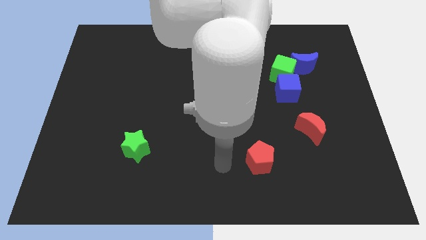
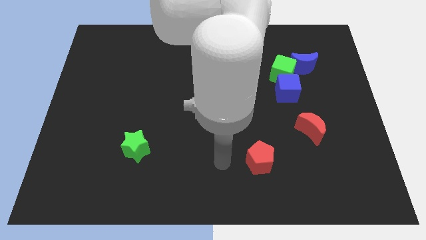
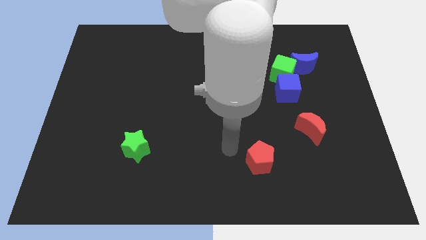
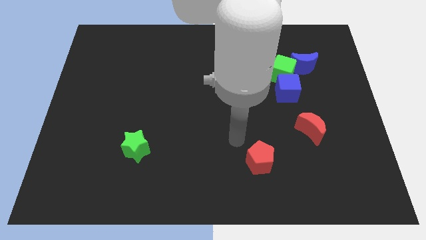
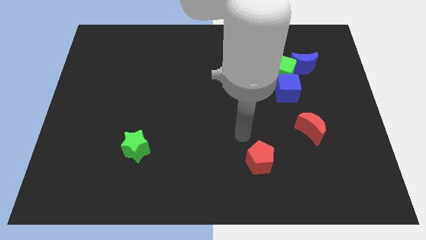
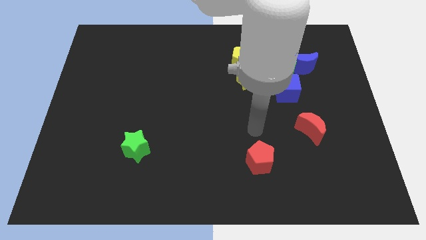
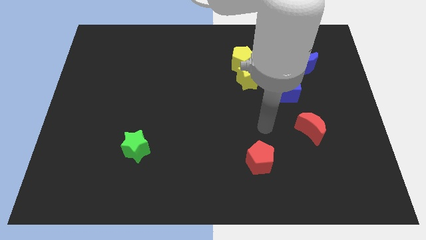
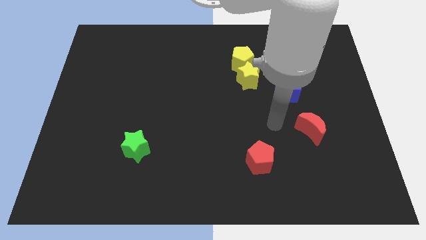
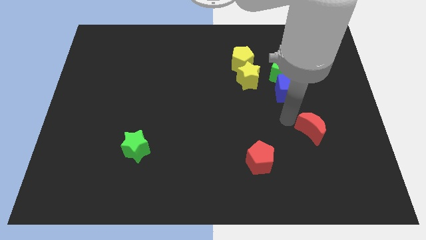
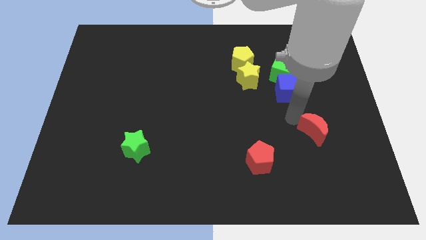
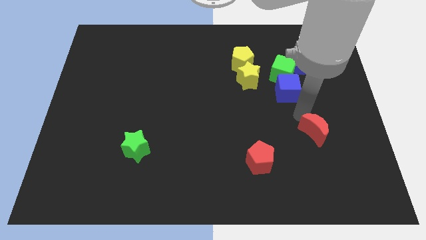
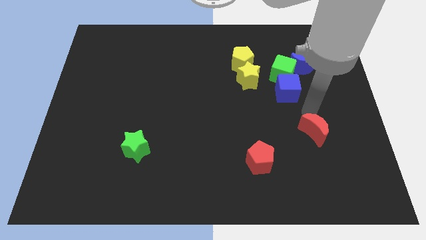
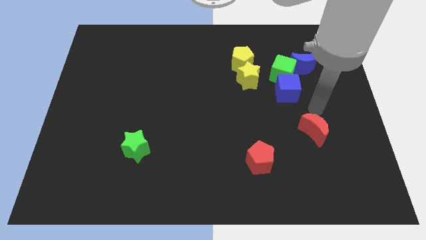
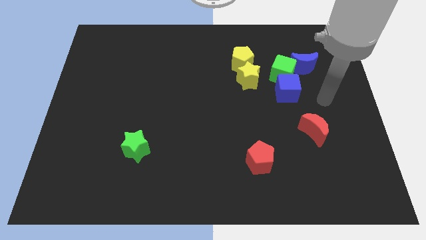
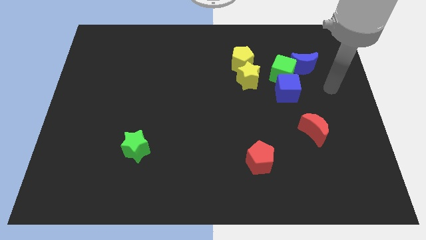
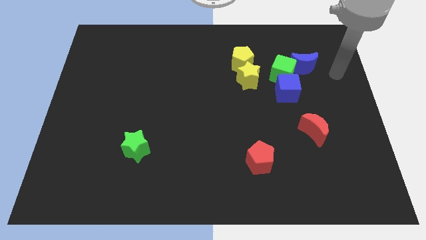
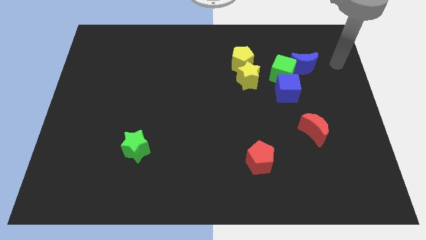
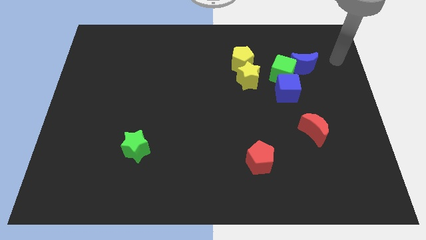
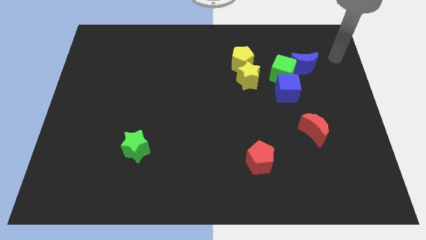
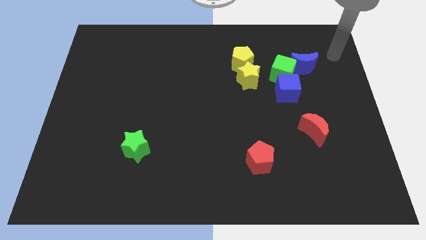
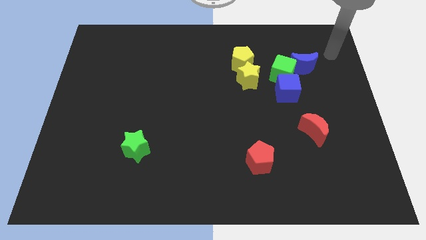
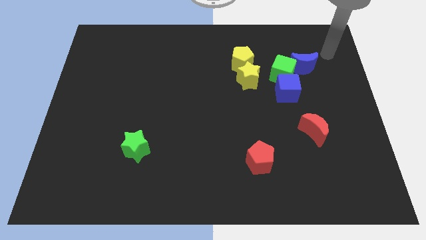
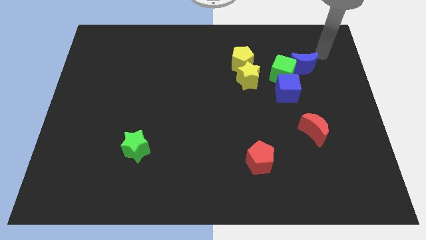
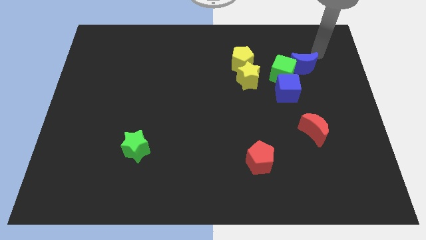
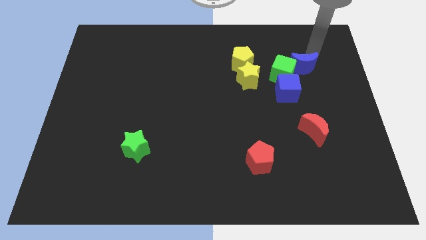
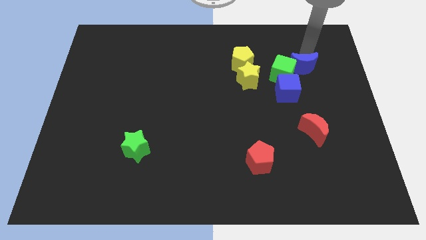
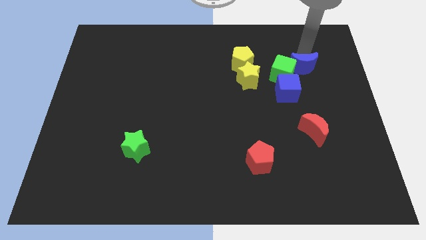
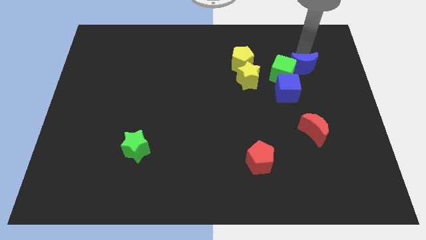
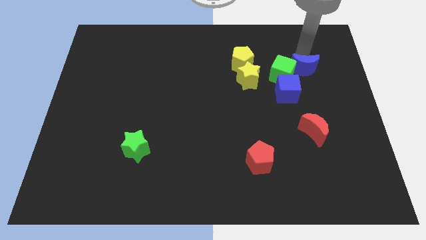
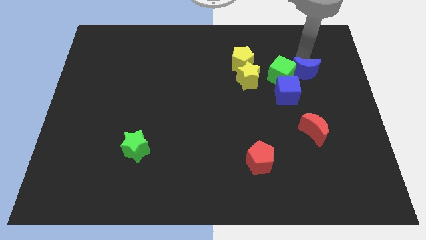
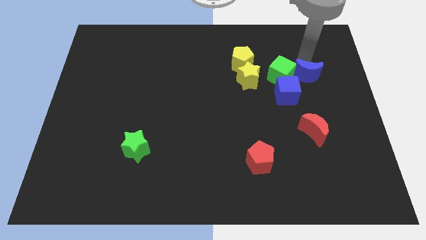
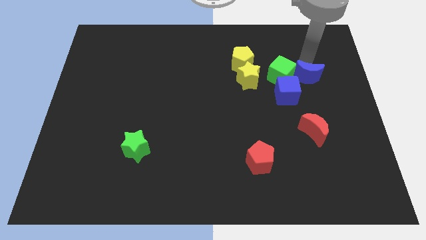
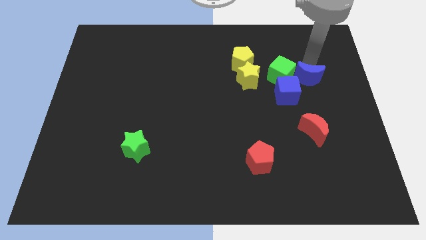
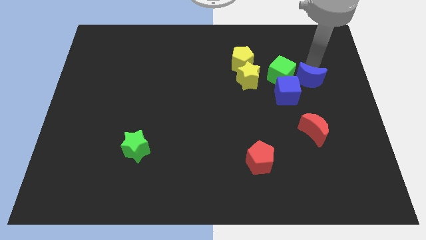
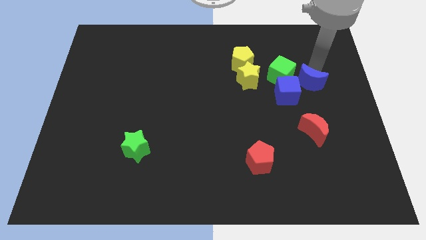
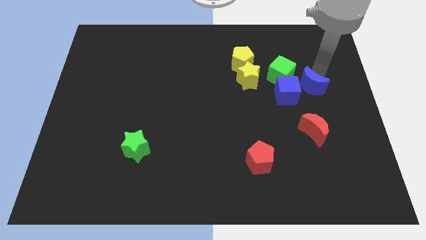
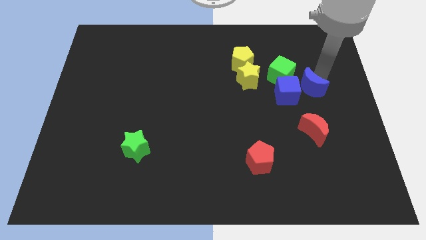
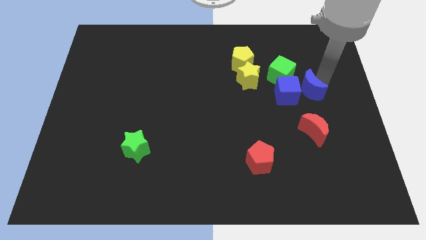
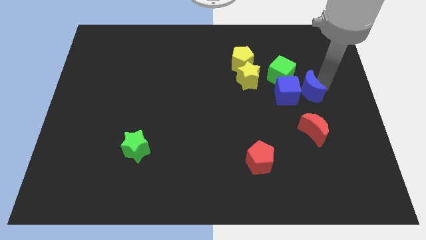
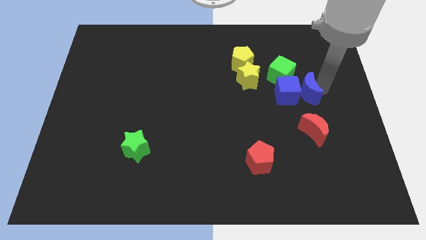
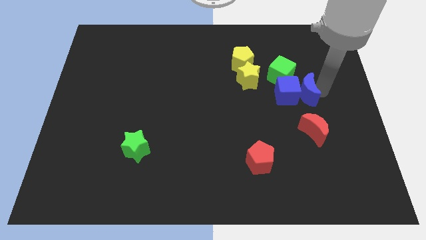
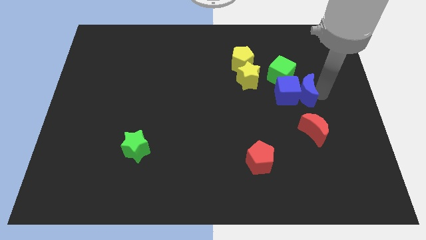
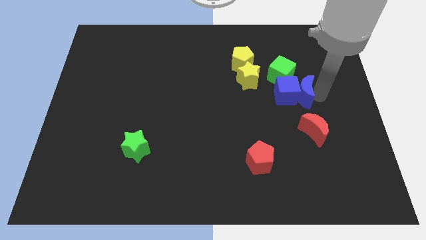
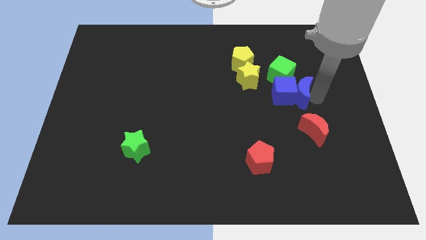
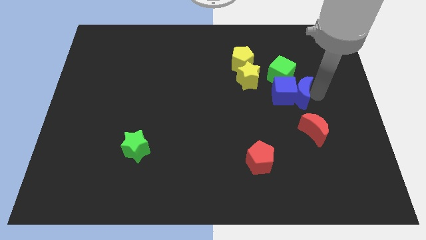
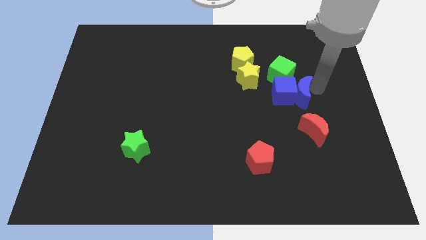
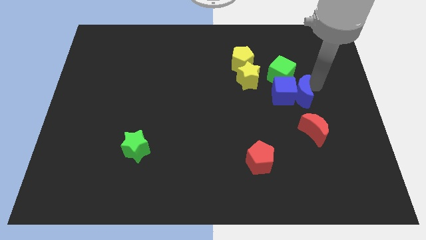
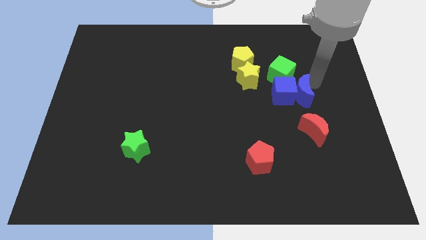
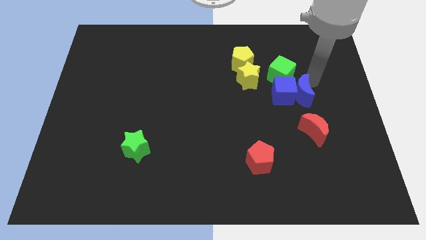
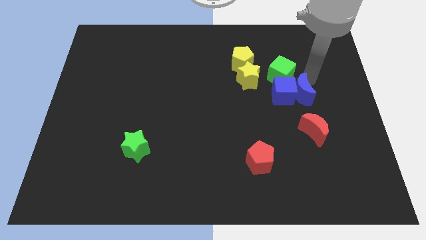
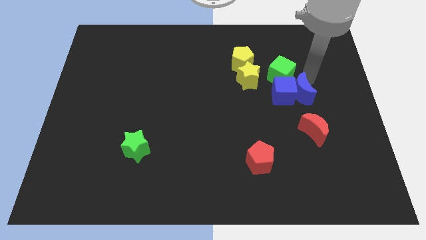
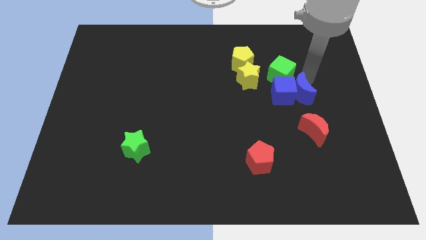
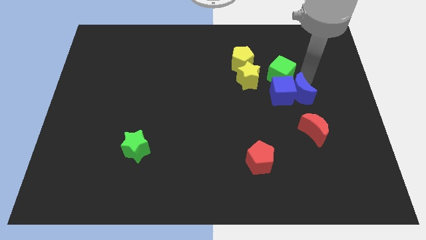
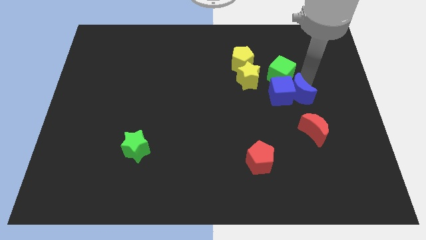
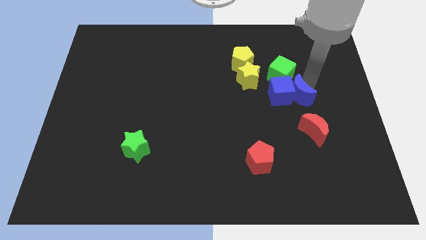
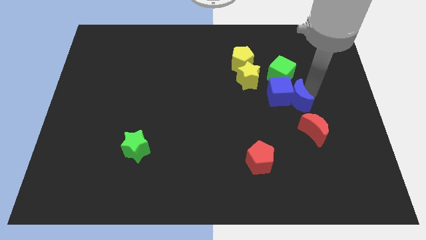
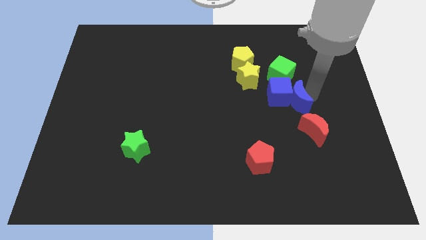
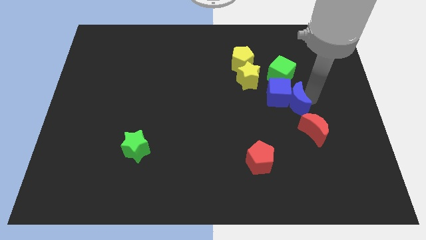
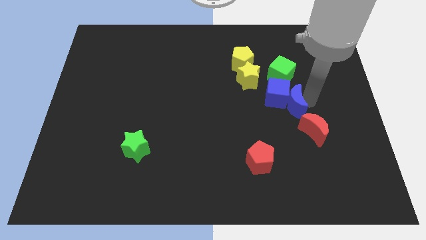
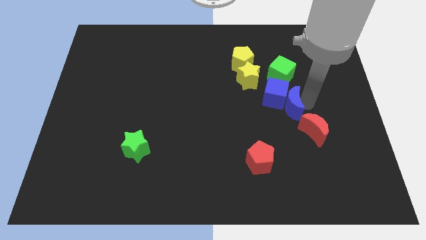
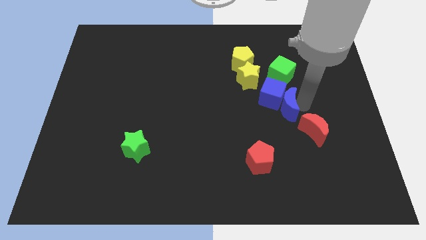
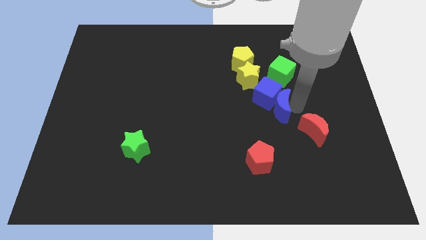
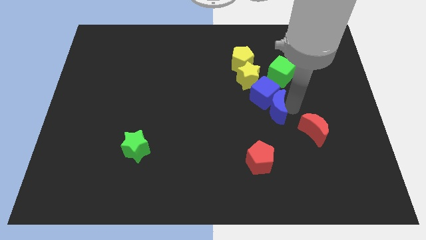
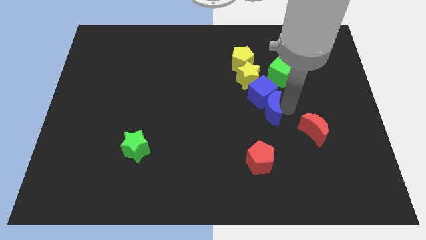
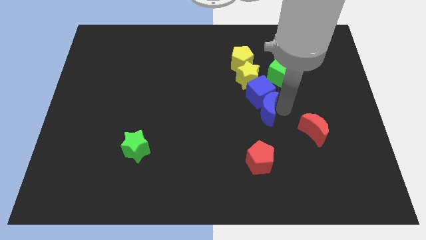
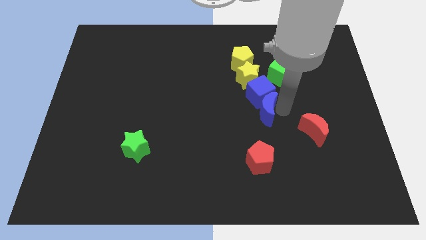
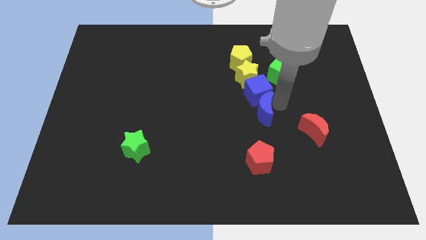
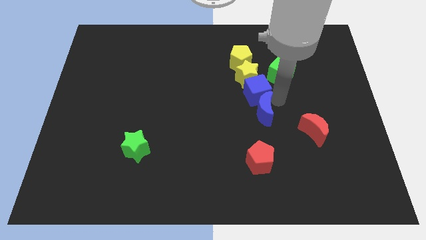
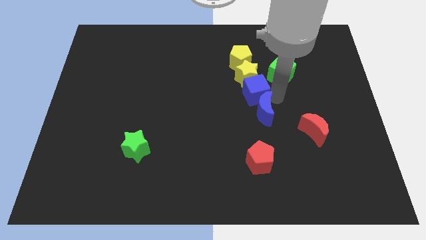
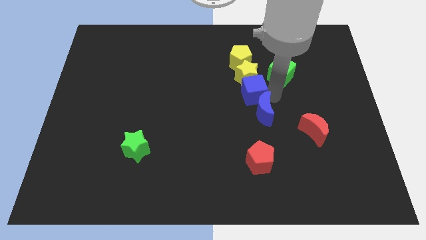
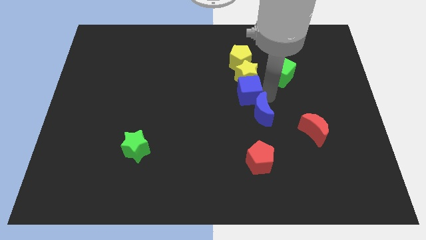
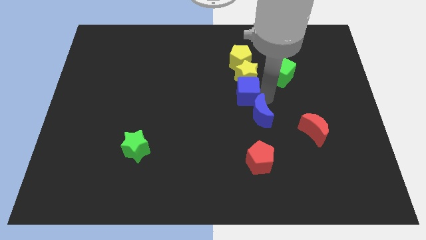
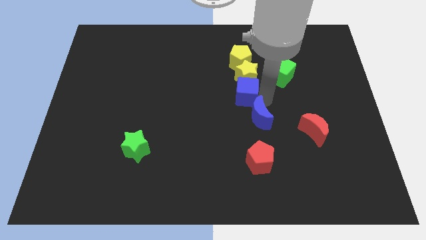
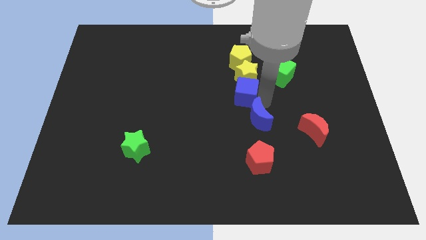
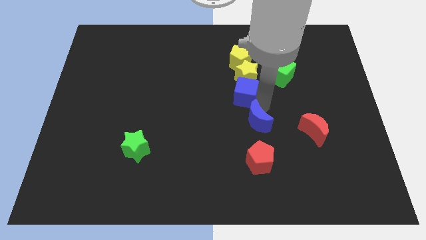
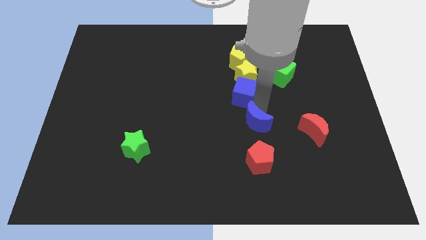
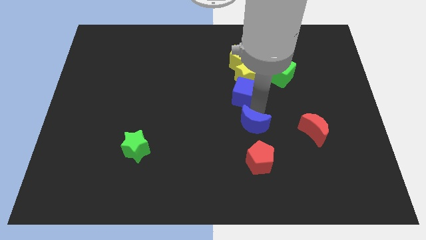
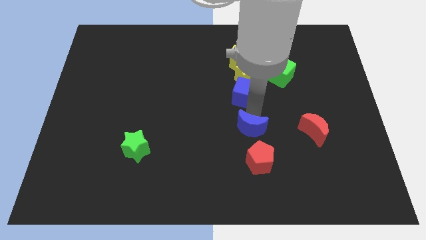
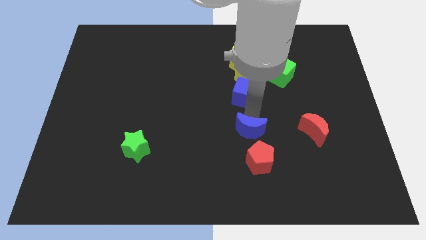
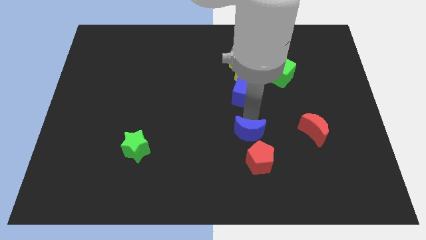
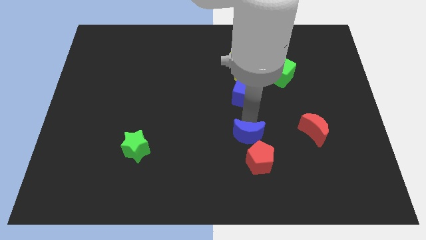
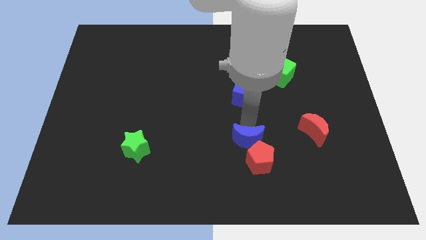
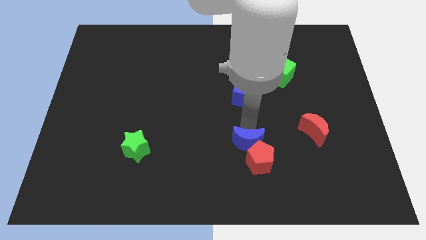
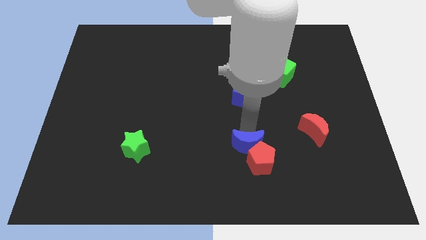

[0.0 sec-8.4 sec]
put the blue moon towards the red pentagon

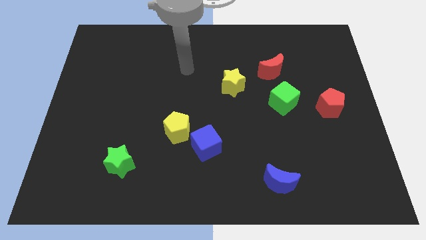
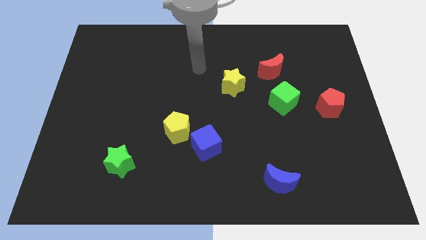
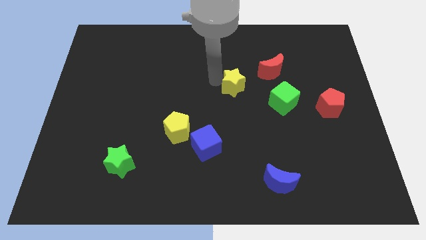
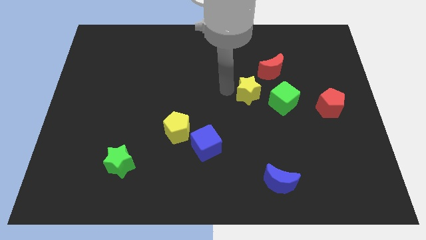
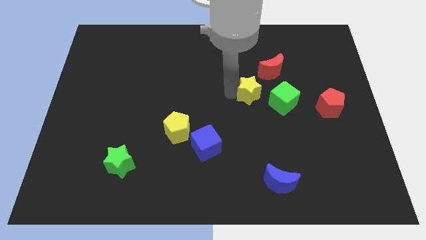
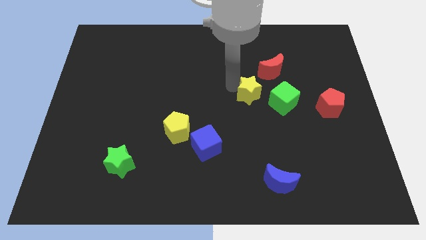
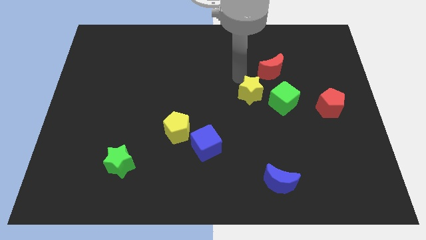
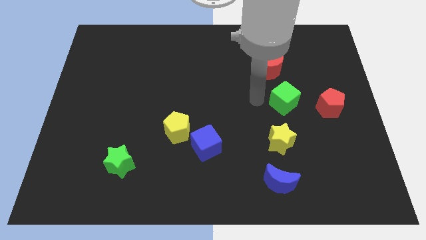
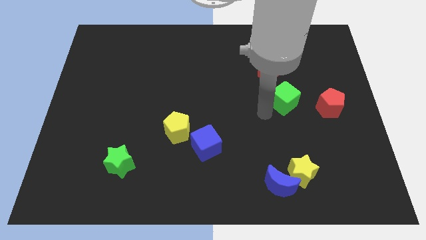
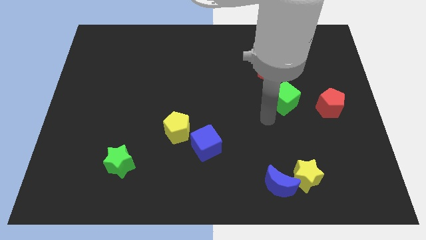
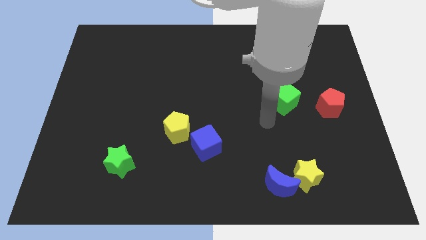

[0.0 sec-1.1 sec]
slide the yellow star to the blue moon
